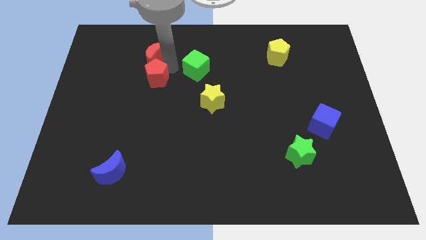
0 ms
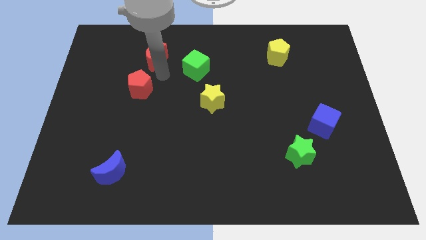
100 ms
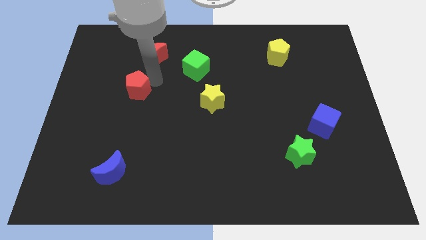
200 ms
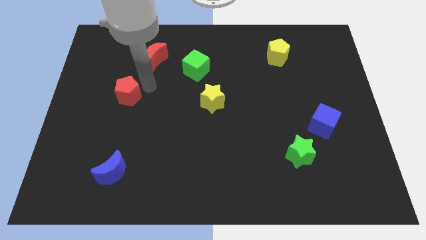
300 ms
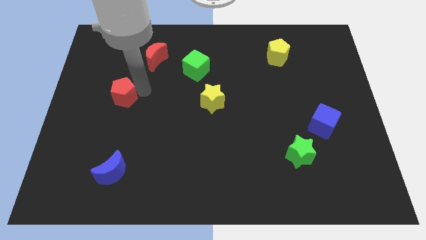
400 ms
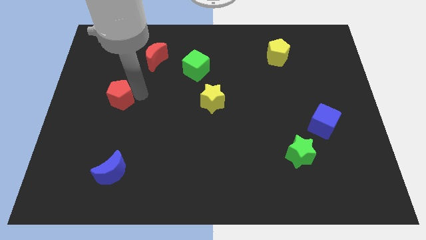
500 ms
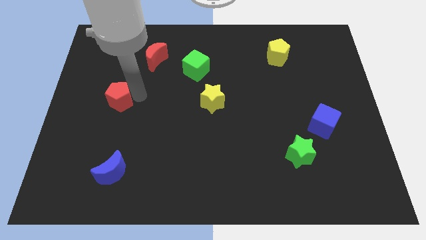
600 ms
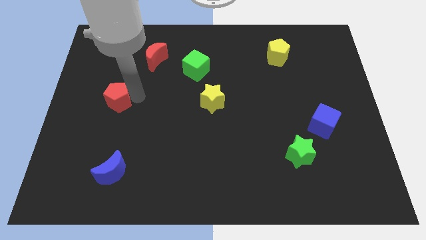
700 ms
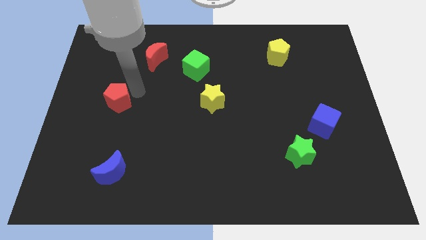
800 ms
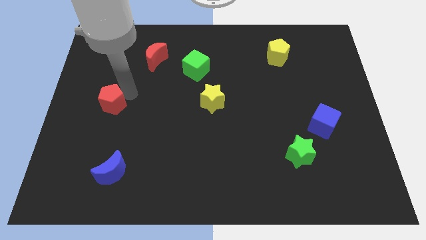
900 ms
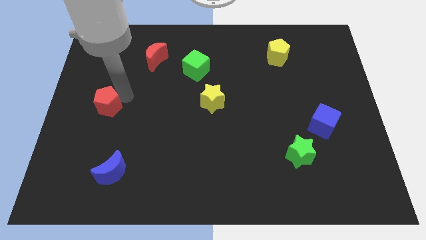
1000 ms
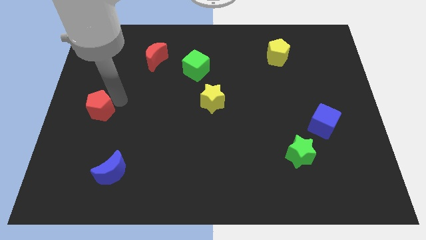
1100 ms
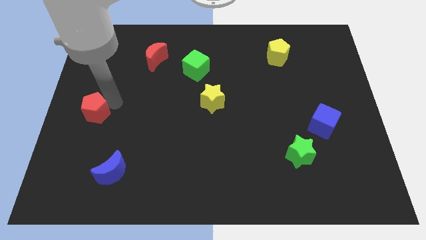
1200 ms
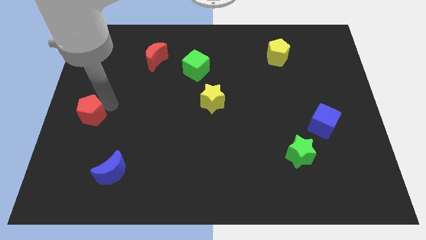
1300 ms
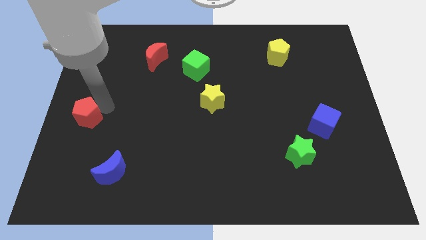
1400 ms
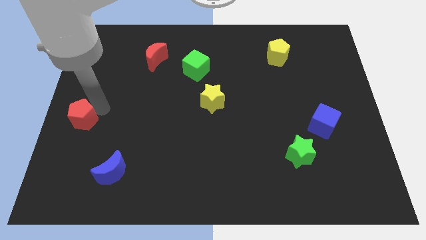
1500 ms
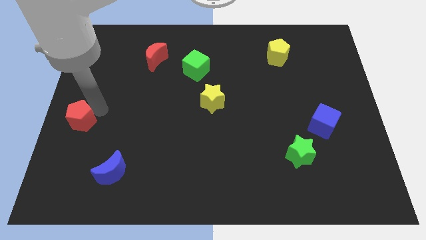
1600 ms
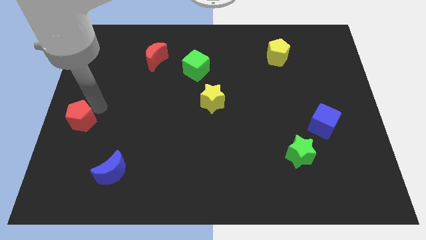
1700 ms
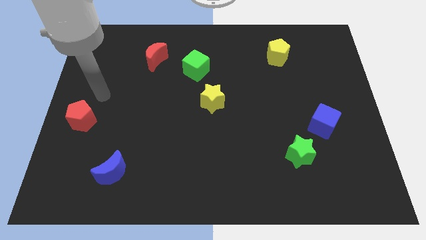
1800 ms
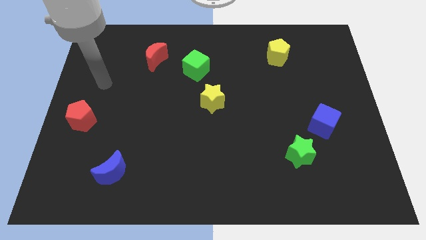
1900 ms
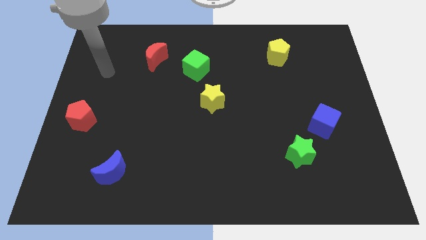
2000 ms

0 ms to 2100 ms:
place the red pentagon to the left center of the board

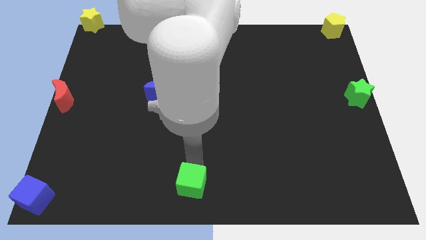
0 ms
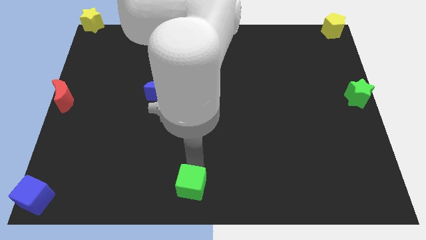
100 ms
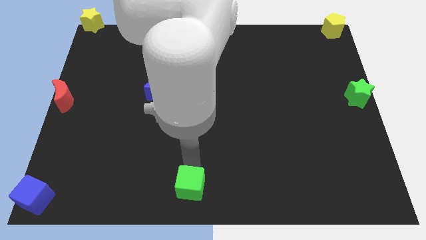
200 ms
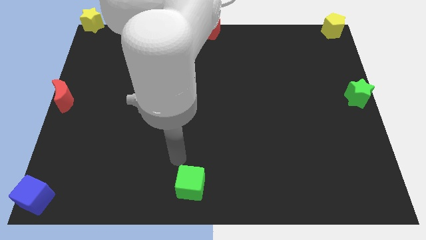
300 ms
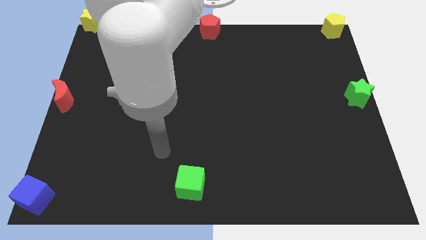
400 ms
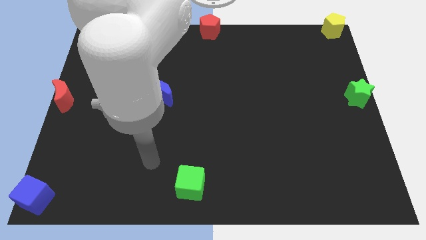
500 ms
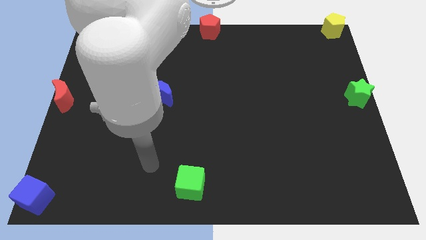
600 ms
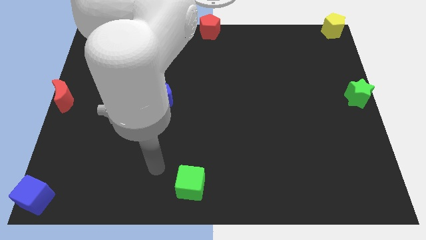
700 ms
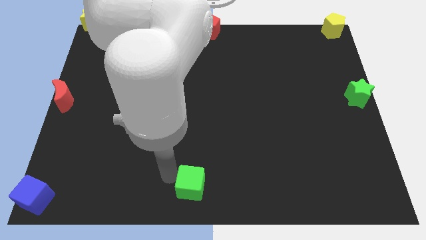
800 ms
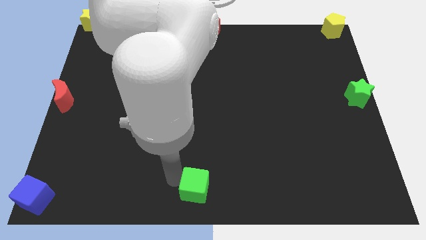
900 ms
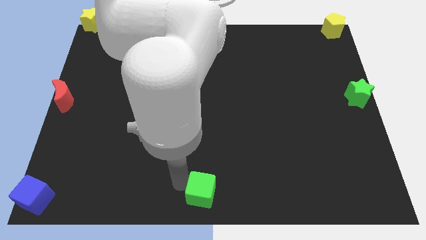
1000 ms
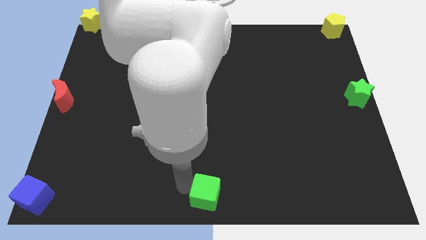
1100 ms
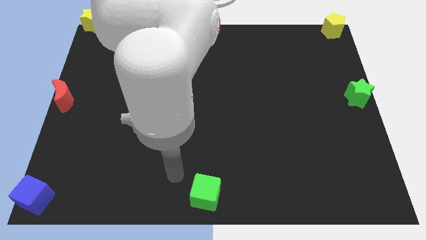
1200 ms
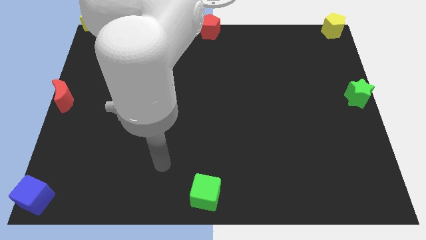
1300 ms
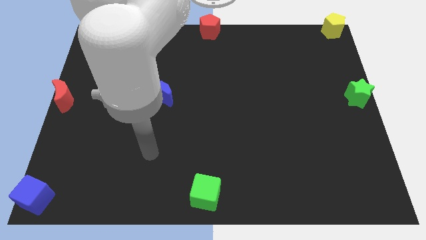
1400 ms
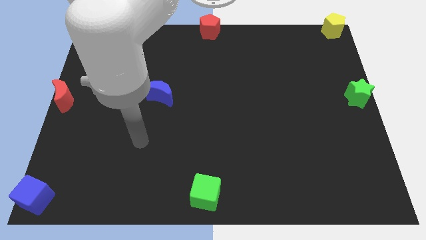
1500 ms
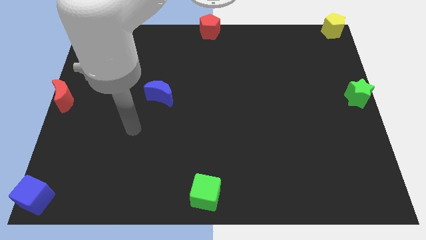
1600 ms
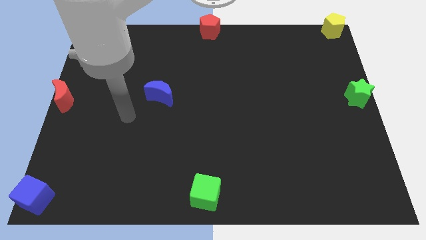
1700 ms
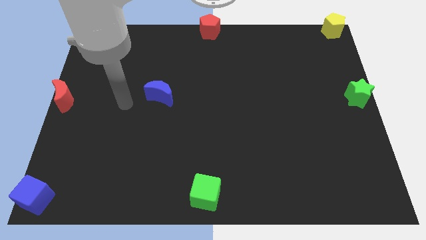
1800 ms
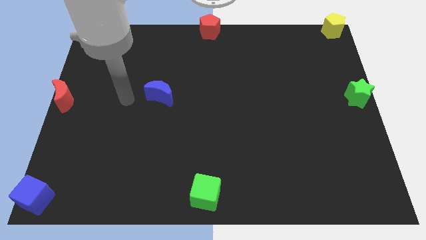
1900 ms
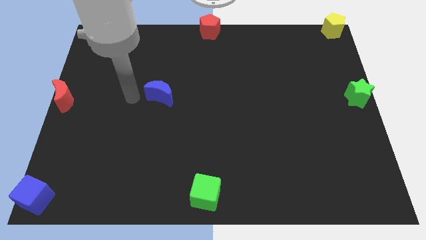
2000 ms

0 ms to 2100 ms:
move the green cube at the bottom center of the board

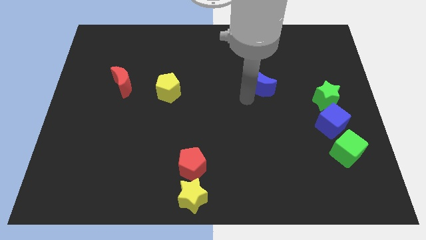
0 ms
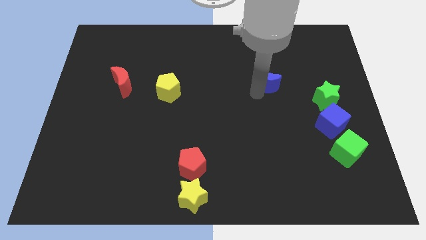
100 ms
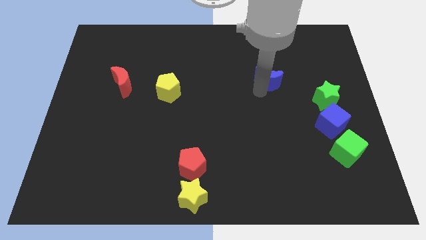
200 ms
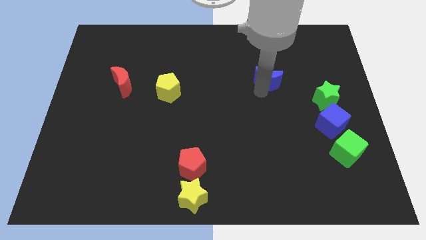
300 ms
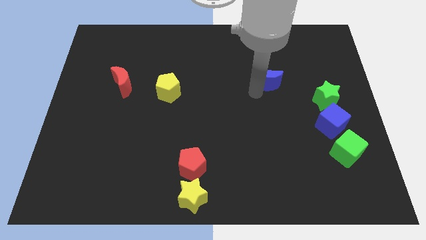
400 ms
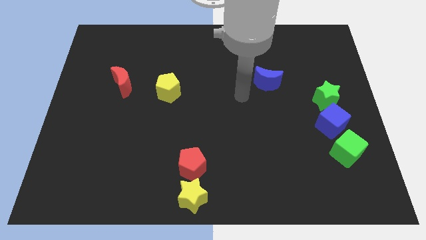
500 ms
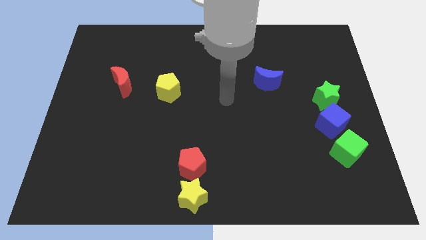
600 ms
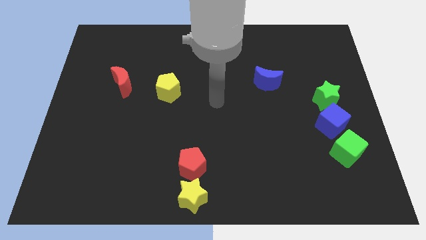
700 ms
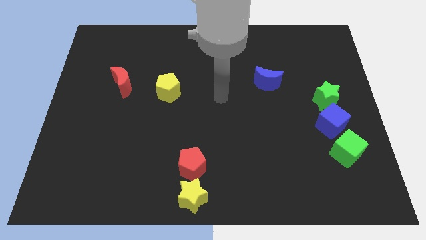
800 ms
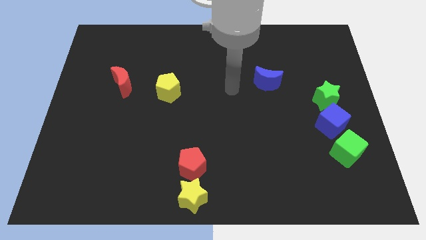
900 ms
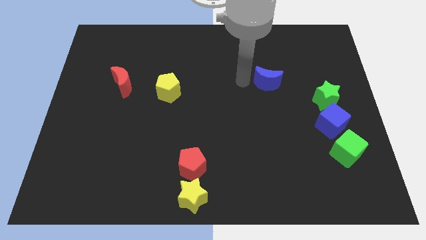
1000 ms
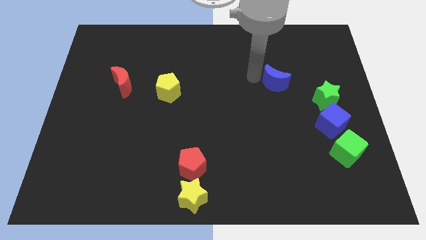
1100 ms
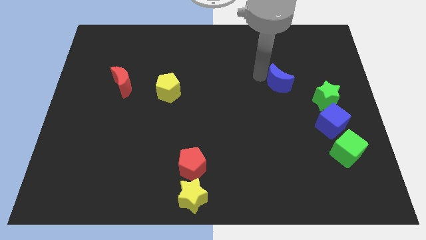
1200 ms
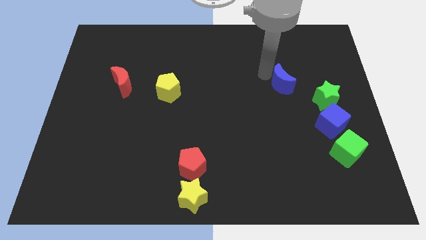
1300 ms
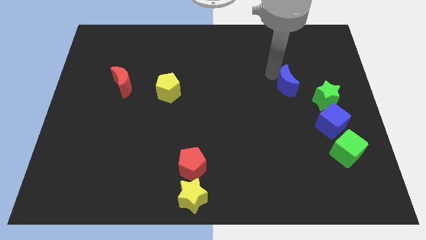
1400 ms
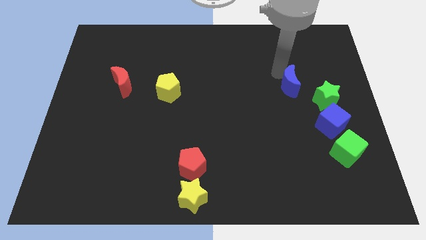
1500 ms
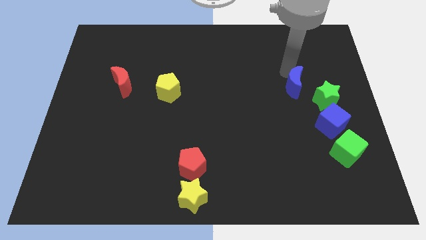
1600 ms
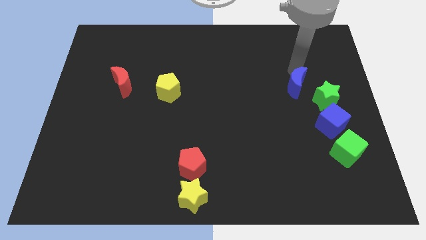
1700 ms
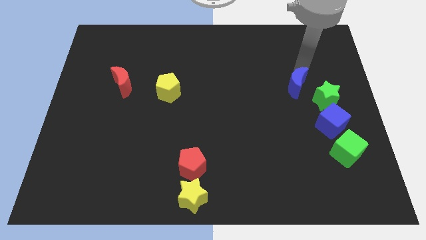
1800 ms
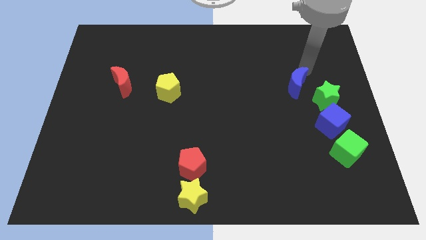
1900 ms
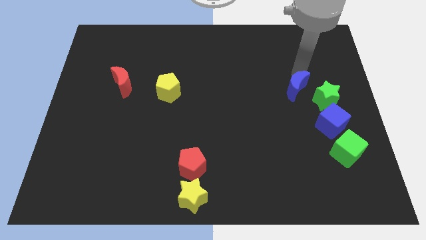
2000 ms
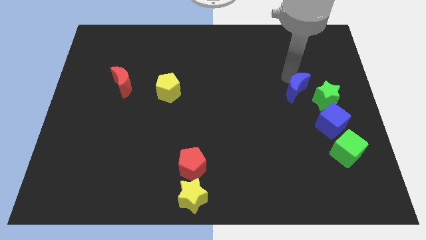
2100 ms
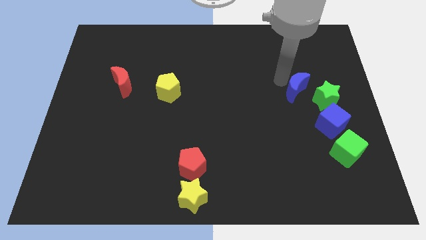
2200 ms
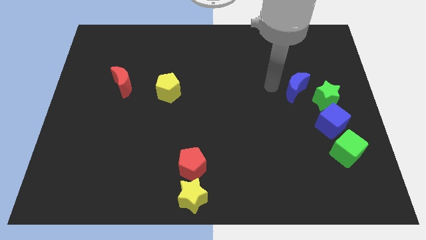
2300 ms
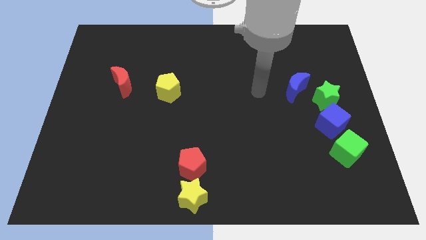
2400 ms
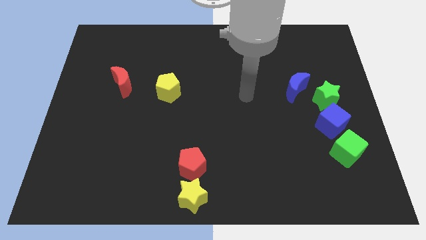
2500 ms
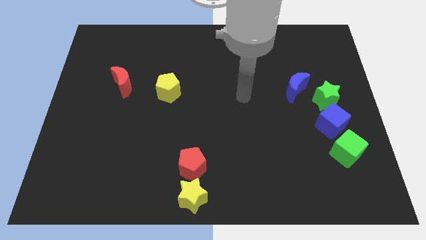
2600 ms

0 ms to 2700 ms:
move the blue crescent to the top left of the green star

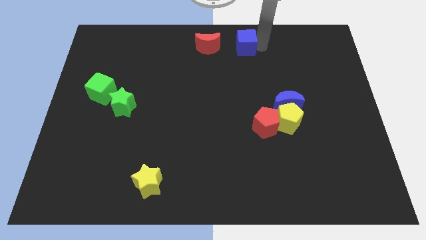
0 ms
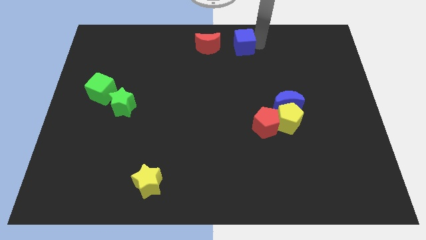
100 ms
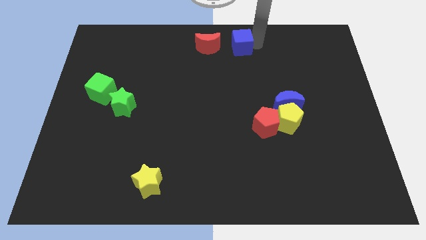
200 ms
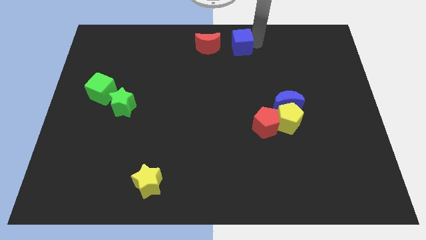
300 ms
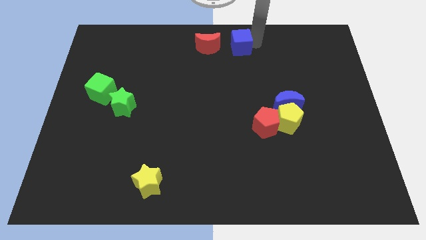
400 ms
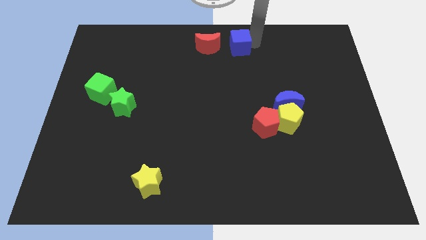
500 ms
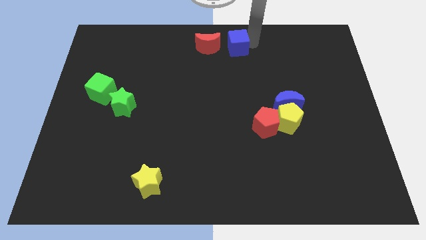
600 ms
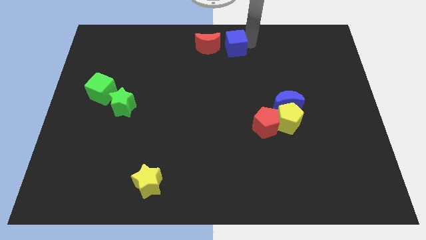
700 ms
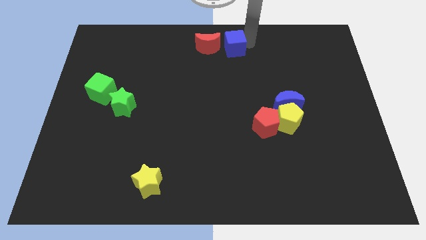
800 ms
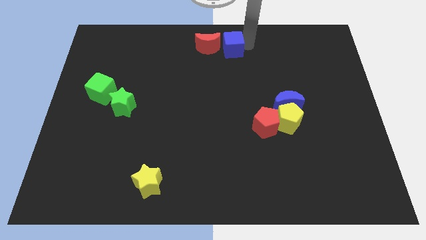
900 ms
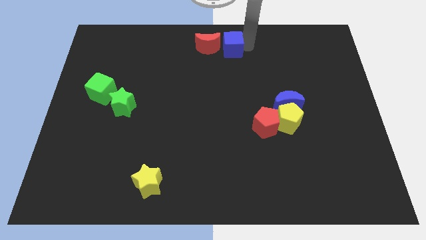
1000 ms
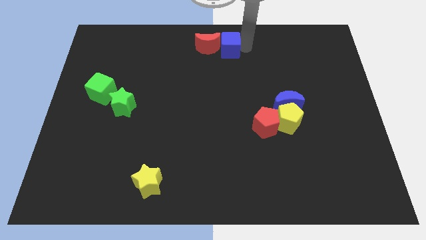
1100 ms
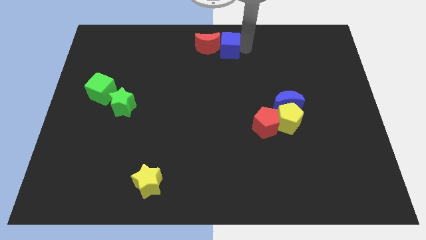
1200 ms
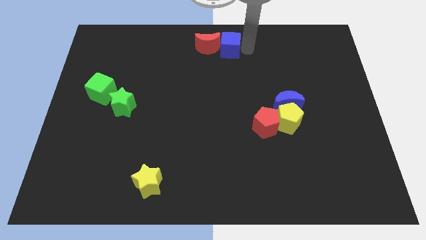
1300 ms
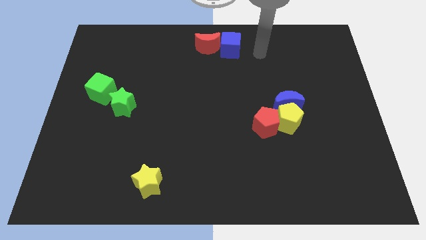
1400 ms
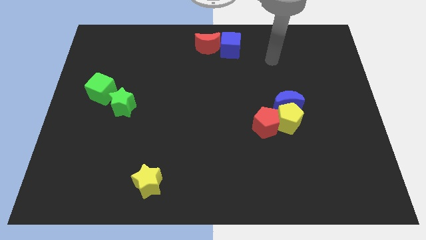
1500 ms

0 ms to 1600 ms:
move the blue cube into the right side of the red crescent

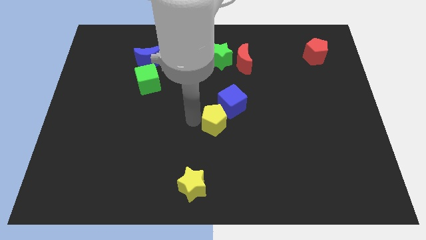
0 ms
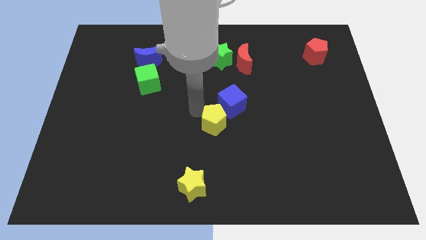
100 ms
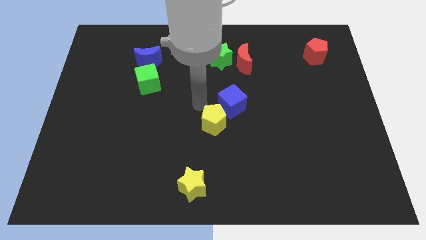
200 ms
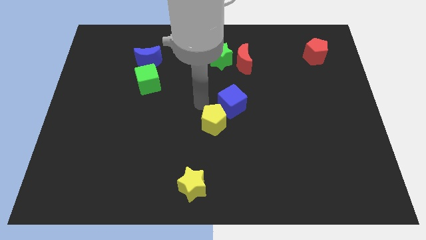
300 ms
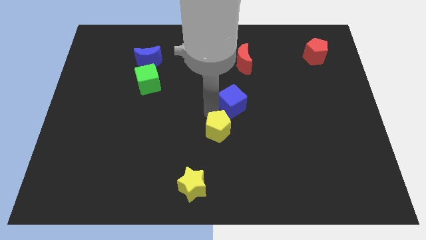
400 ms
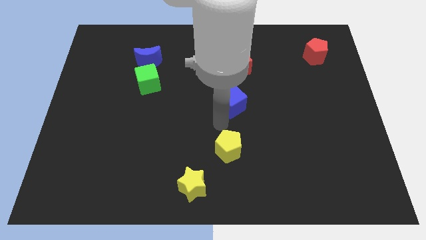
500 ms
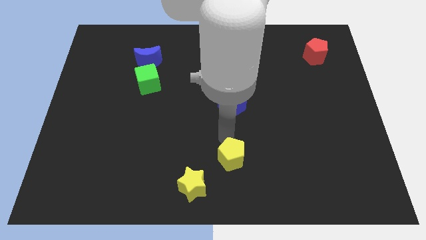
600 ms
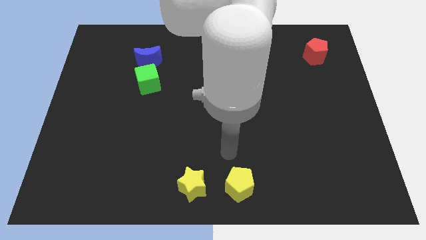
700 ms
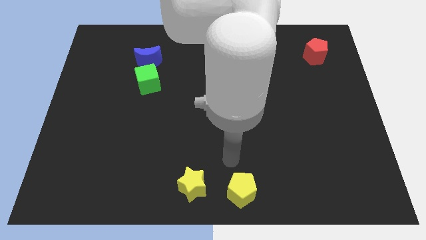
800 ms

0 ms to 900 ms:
move the yellow pentagon to the right of the yellow star
